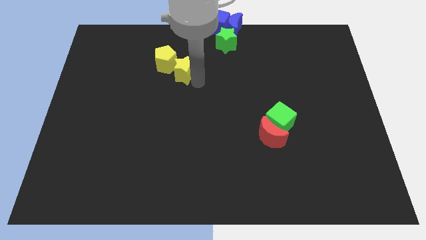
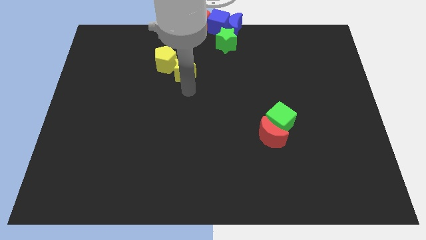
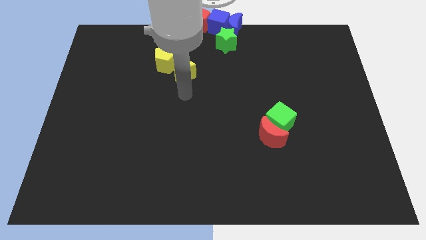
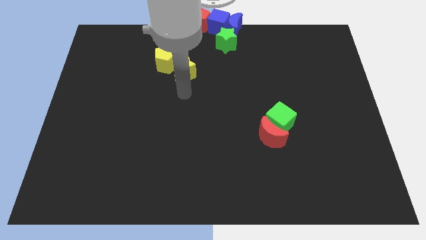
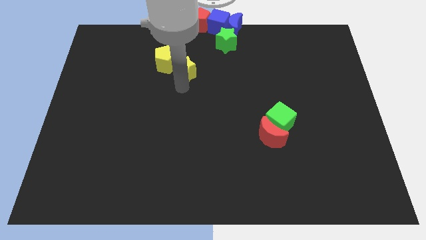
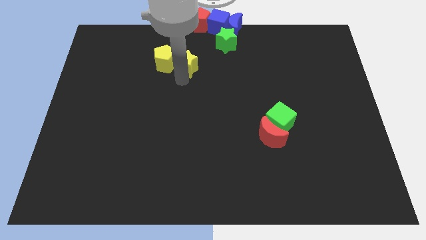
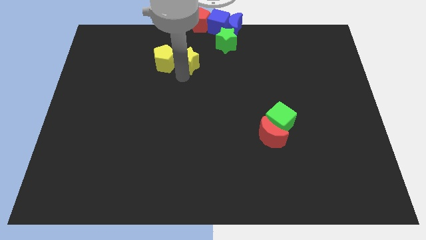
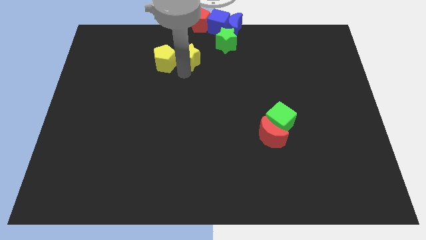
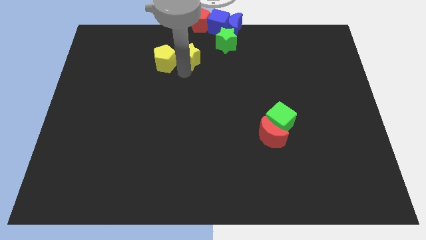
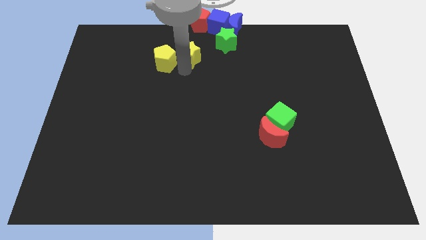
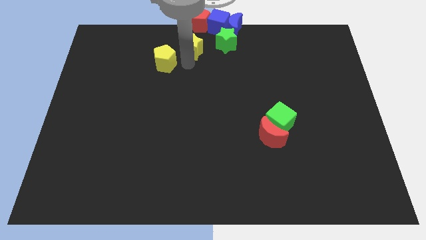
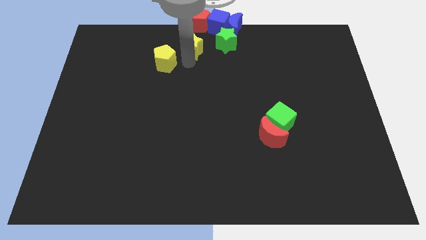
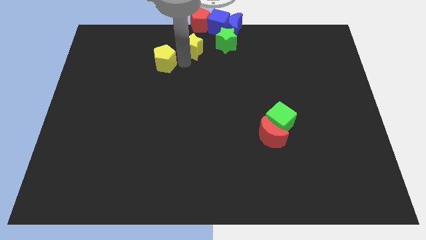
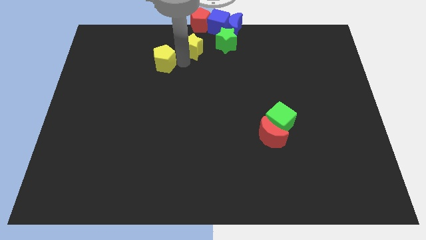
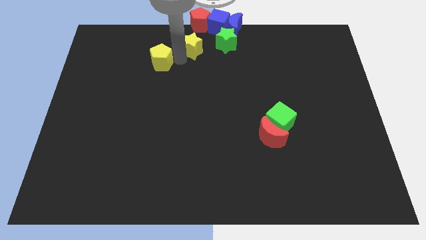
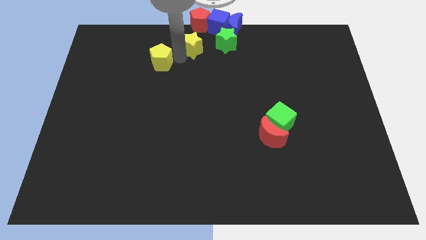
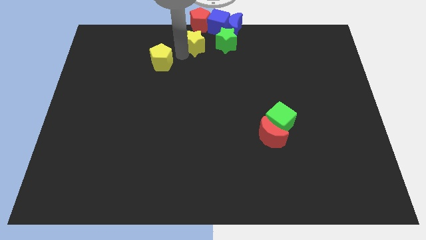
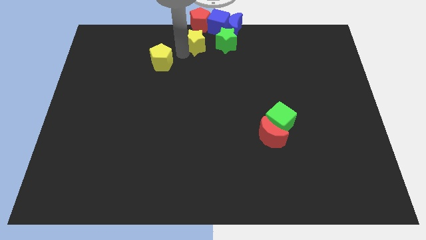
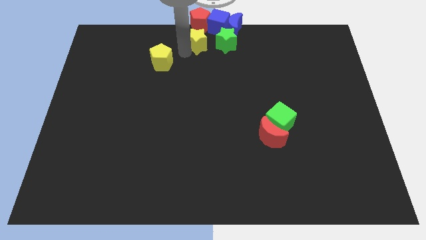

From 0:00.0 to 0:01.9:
push the yellow star to the left of the green star

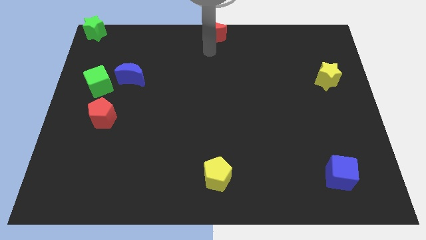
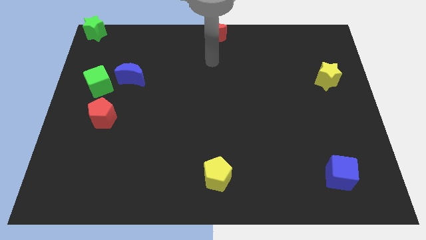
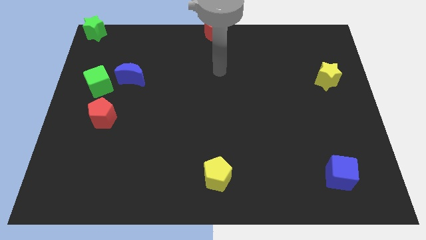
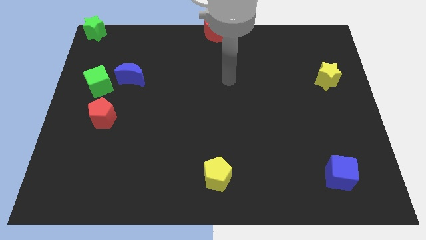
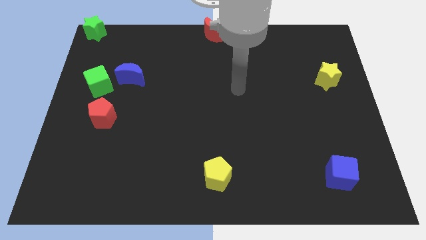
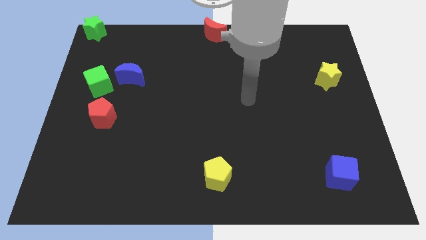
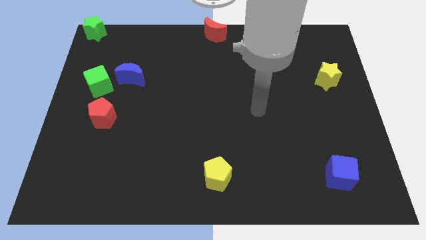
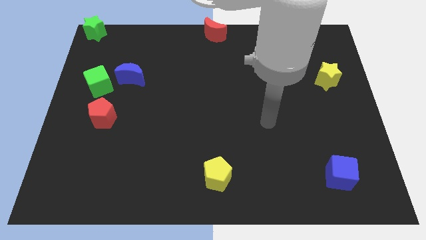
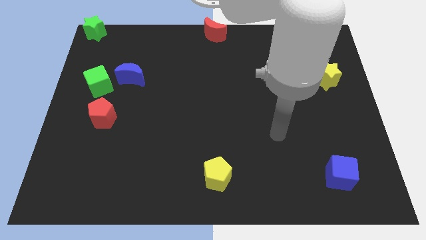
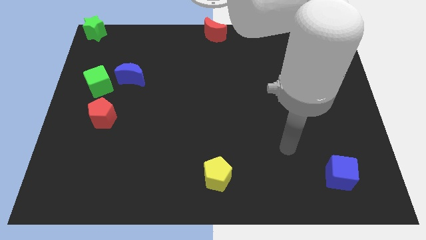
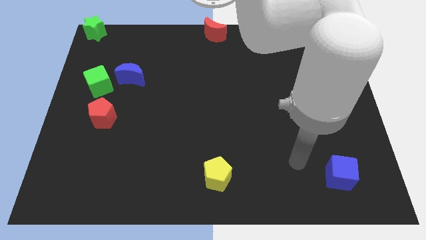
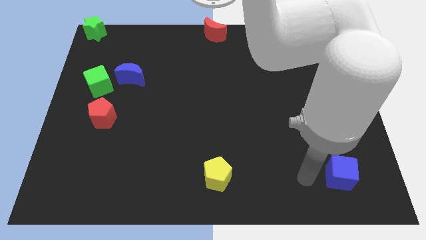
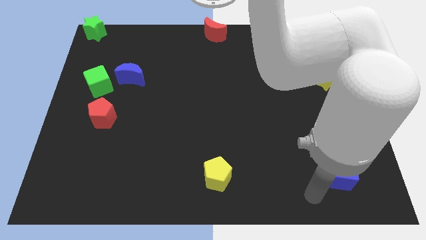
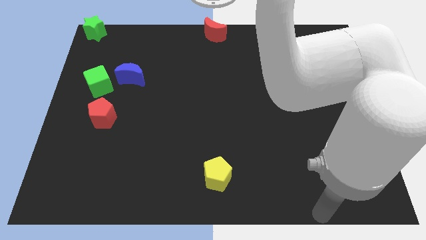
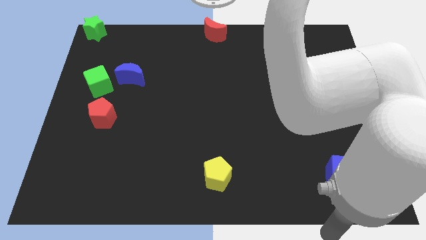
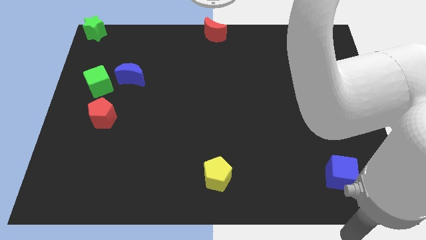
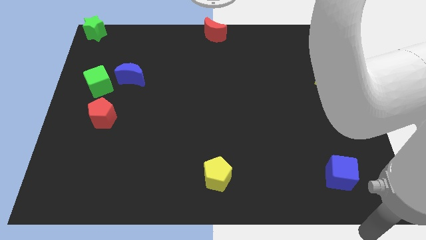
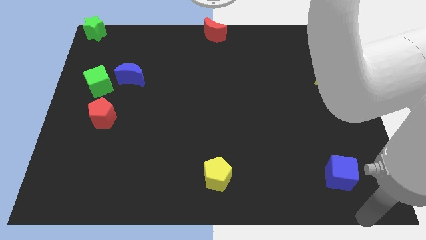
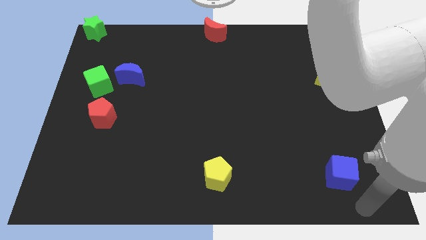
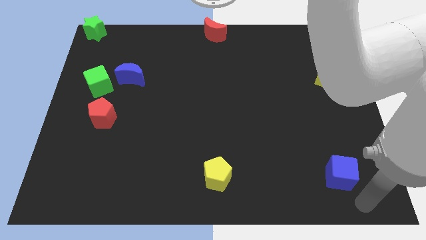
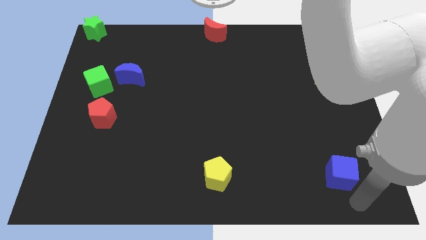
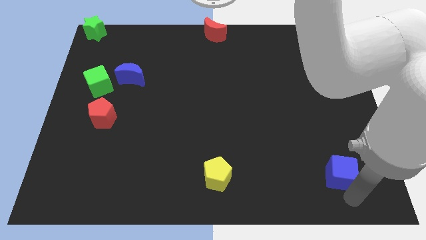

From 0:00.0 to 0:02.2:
place the arm below the blue cube

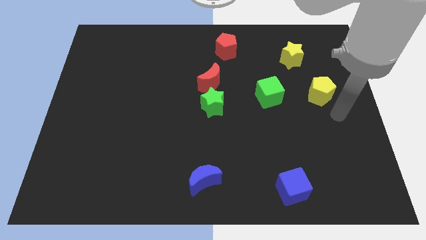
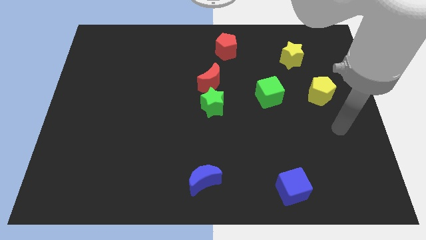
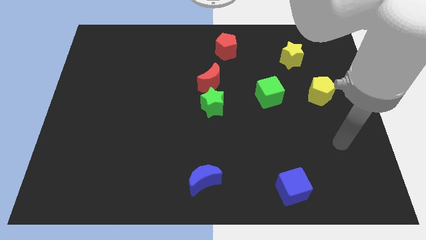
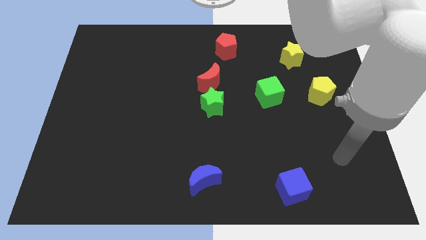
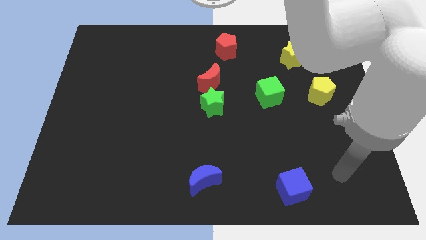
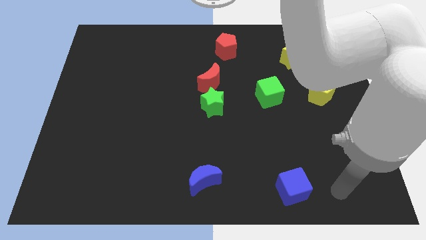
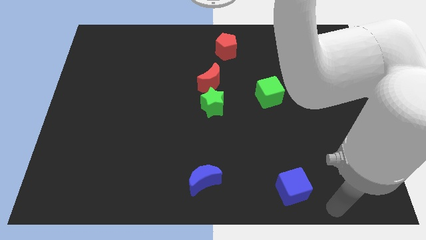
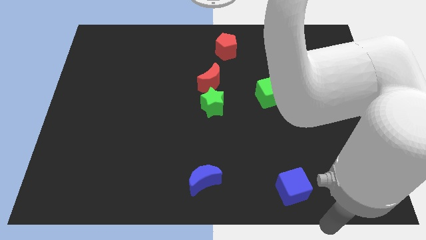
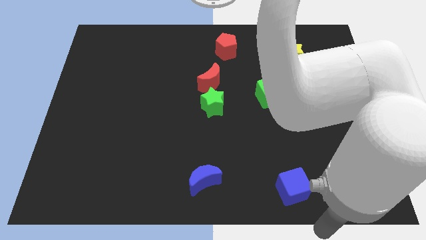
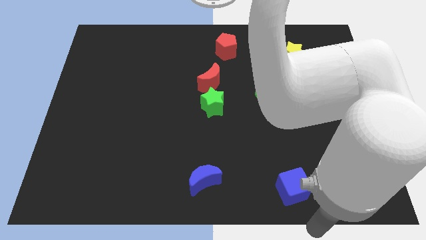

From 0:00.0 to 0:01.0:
move your arm to the bottom right corner

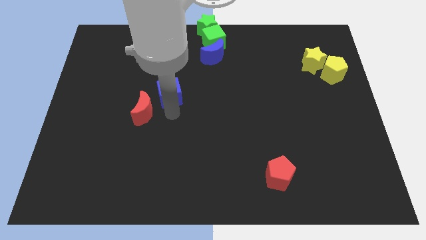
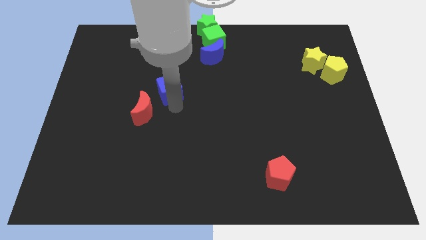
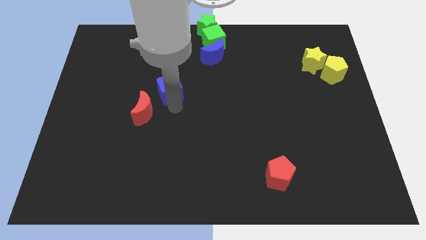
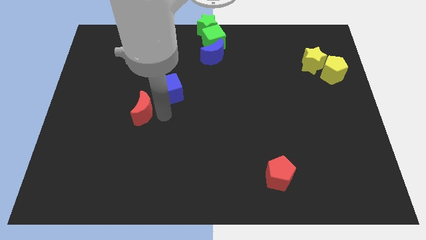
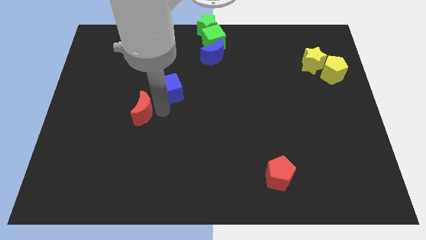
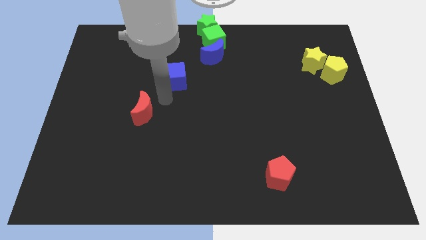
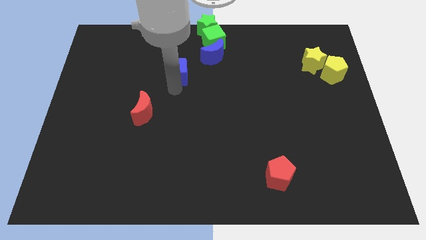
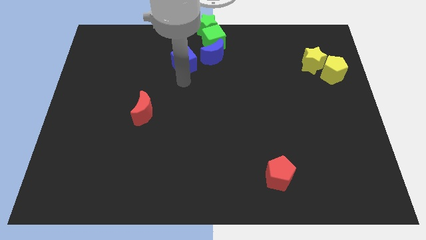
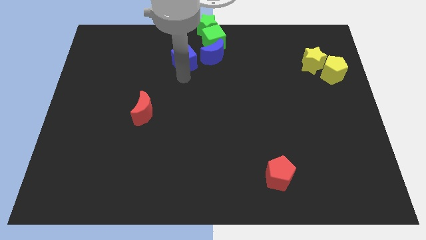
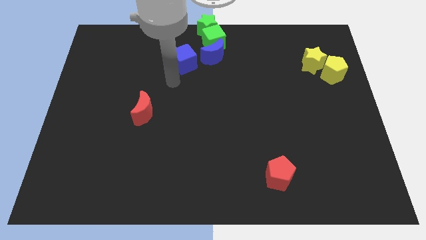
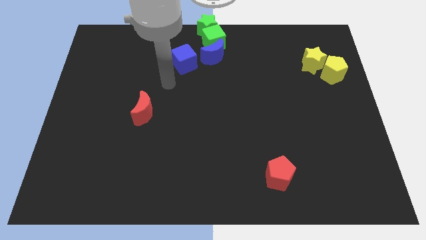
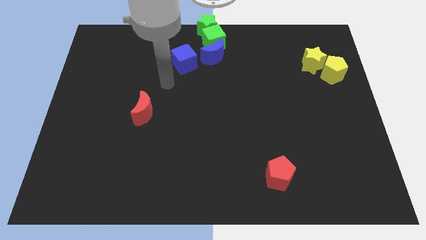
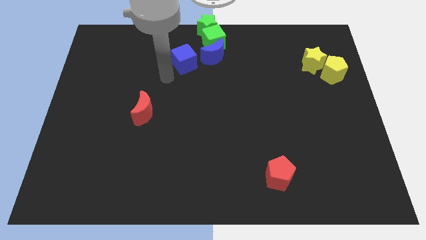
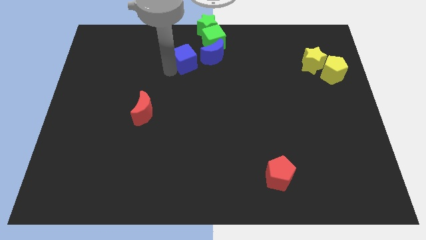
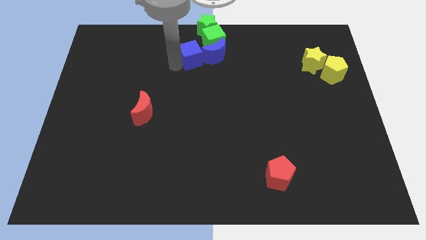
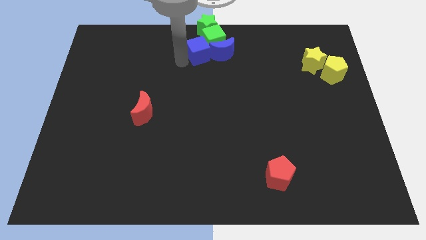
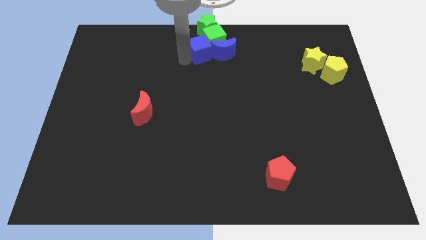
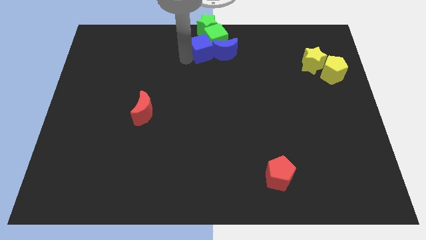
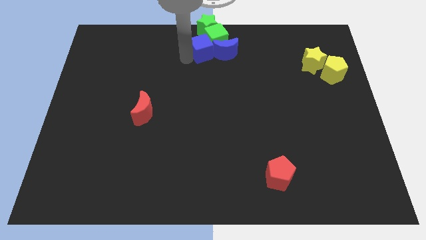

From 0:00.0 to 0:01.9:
push the blue cube into the blue moon

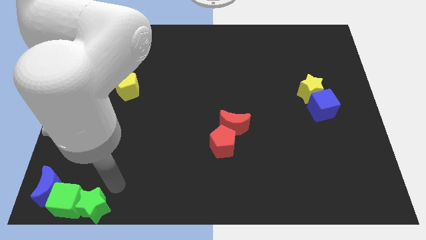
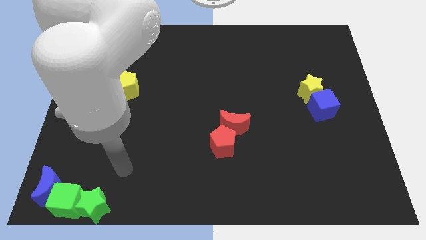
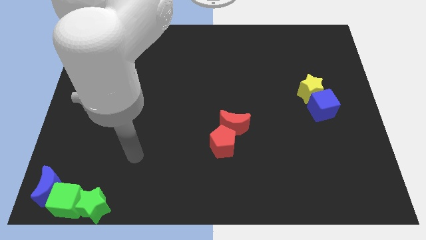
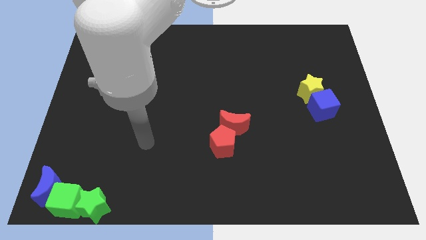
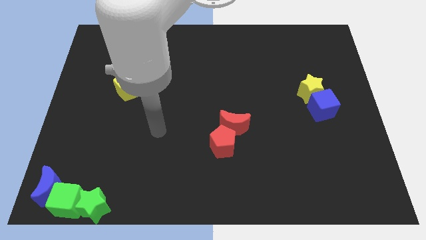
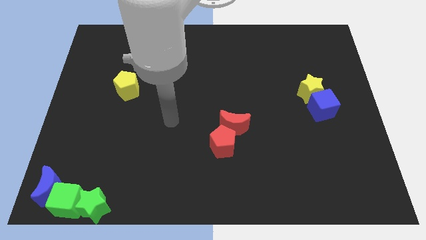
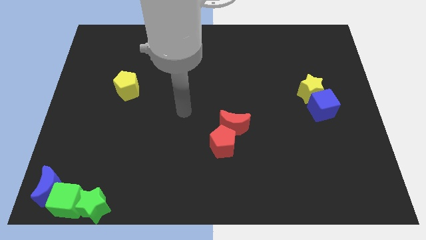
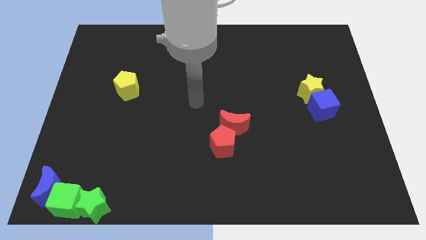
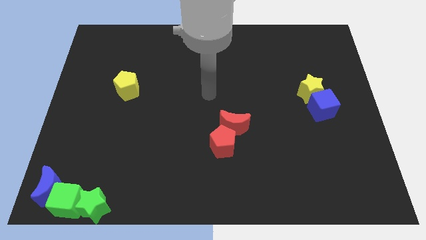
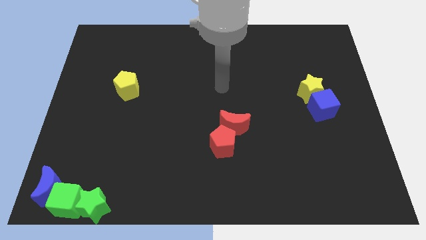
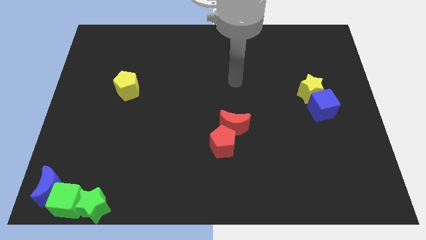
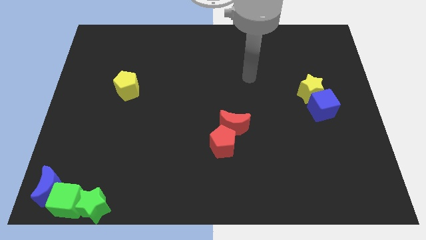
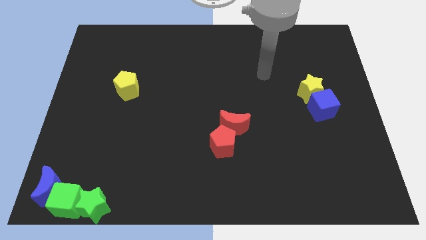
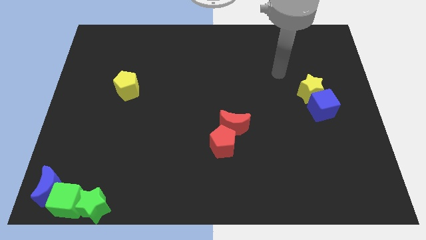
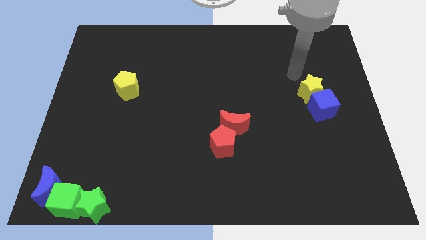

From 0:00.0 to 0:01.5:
move your arm towards the top right corner of the board

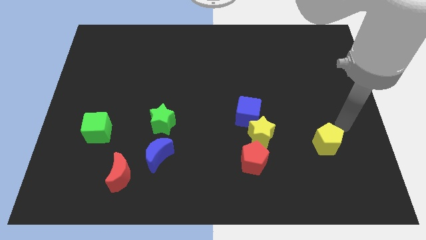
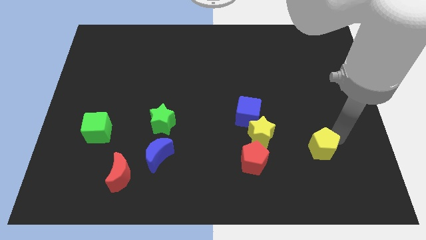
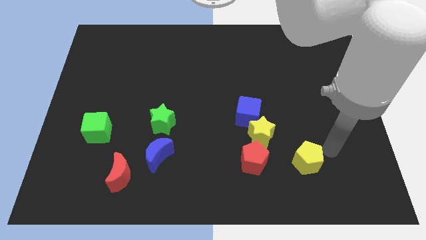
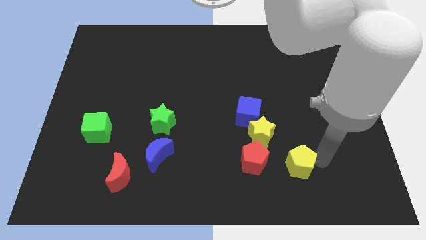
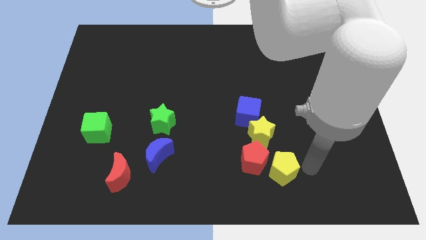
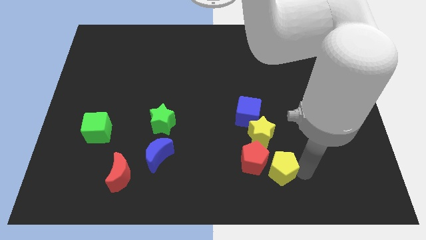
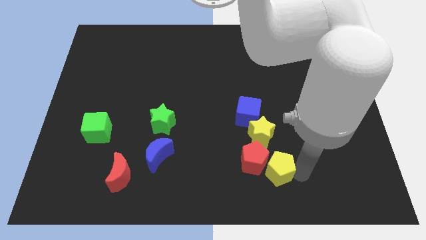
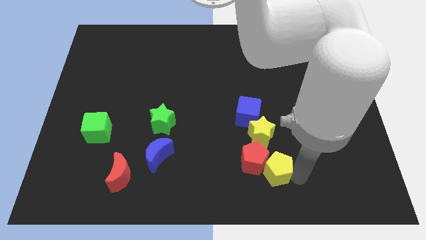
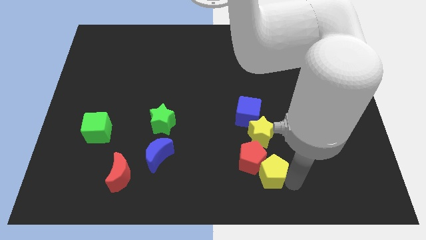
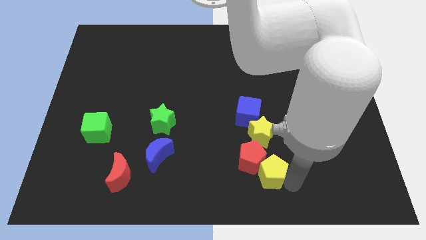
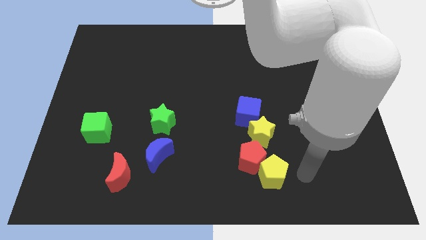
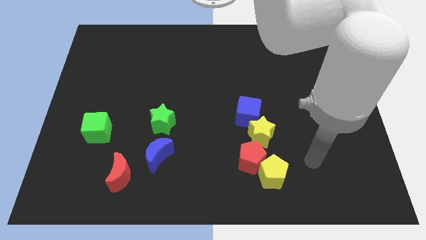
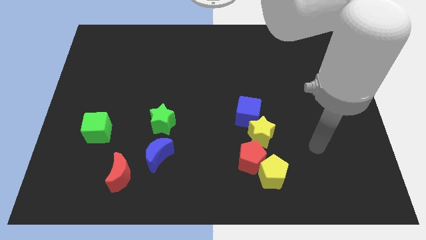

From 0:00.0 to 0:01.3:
move the yellow pentagon into the red pentagon
